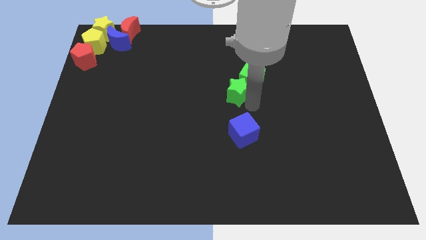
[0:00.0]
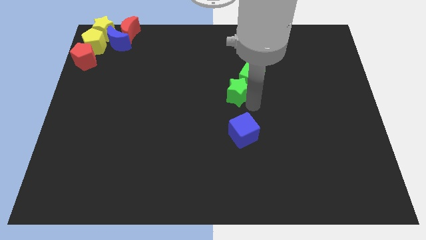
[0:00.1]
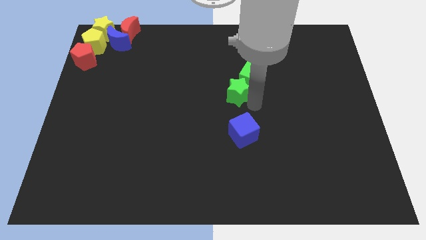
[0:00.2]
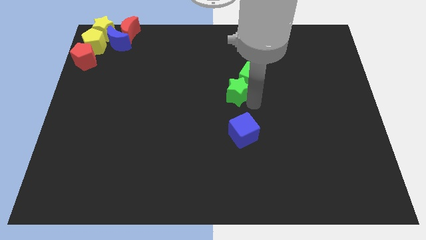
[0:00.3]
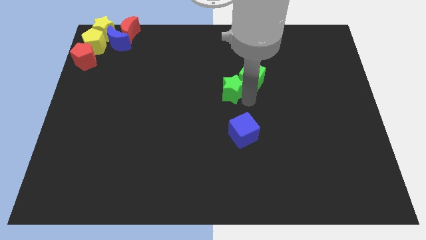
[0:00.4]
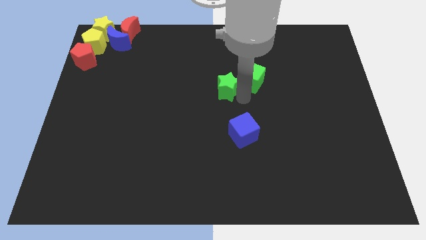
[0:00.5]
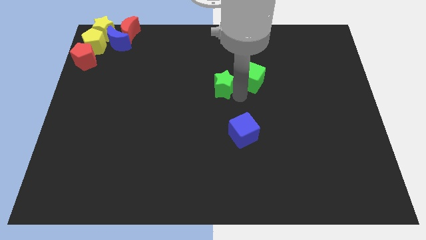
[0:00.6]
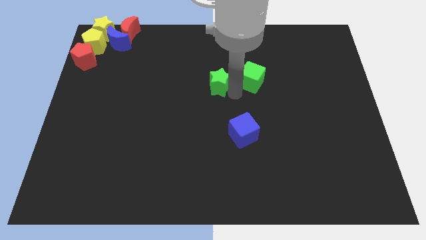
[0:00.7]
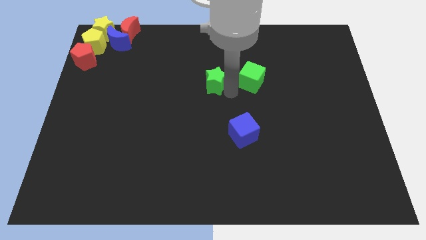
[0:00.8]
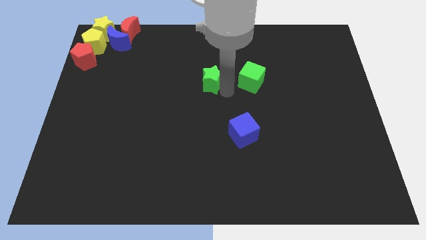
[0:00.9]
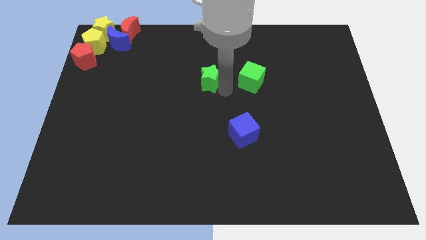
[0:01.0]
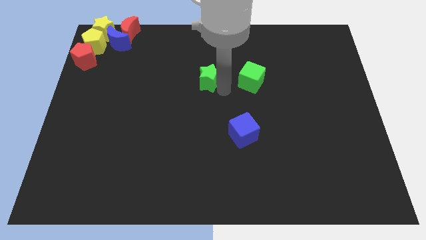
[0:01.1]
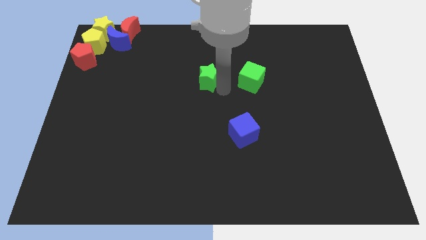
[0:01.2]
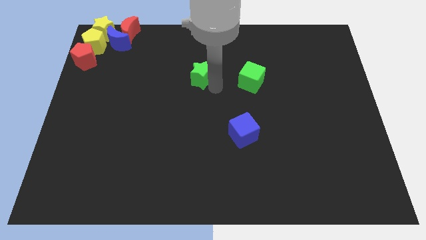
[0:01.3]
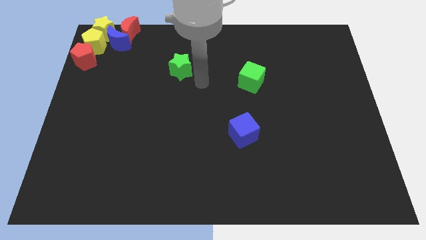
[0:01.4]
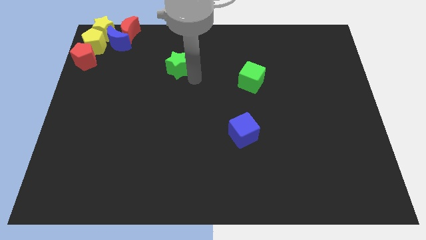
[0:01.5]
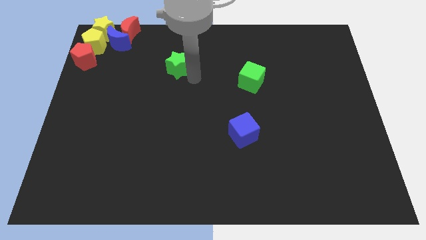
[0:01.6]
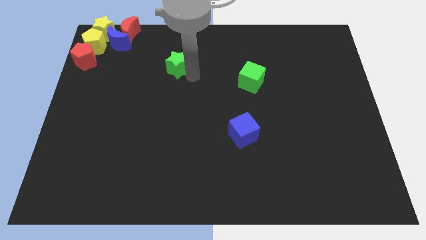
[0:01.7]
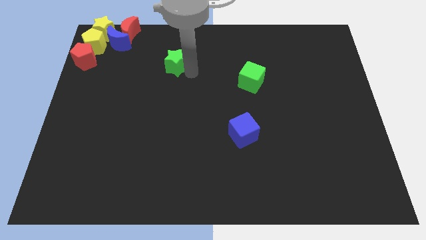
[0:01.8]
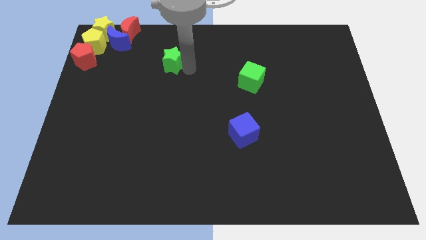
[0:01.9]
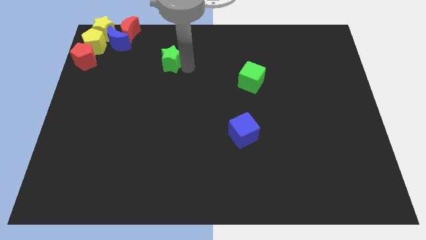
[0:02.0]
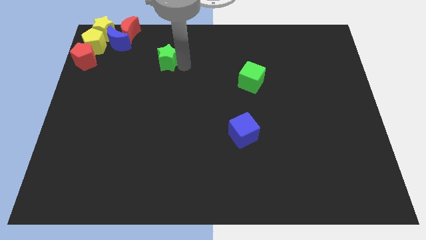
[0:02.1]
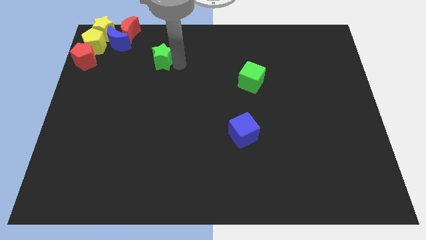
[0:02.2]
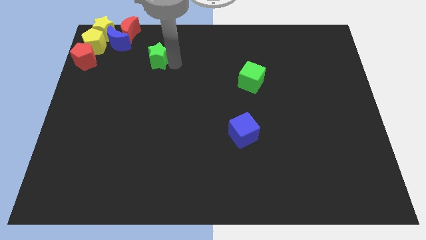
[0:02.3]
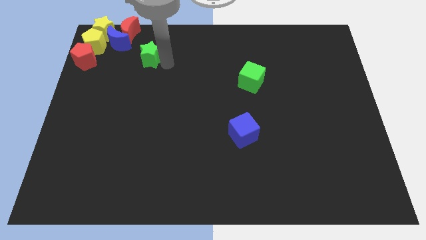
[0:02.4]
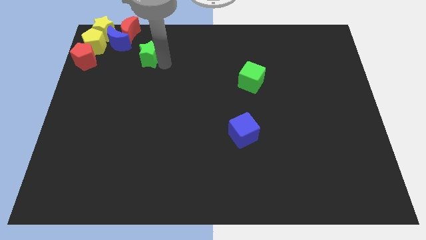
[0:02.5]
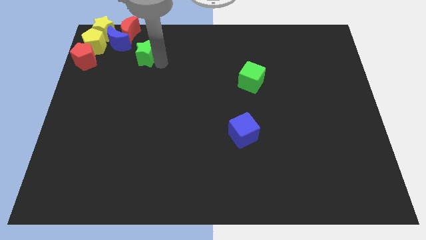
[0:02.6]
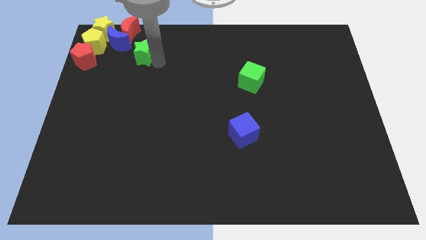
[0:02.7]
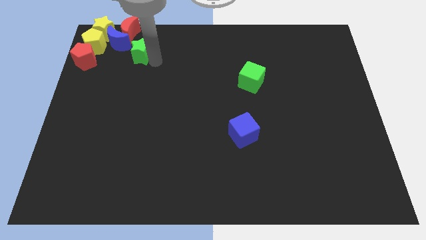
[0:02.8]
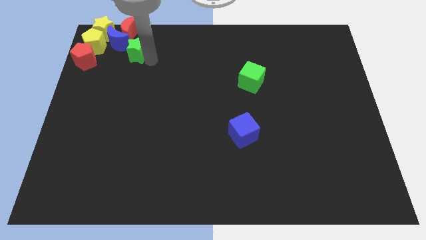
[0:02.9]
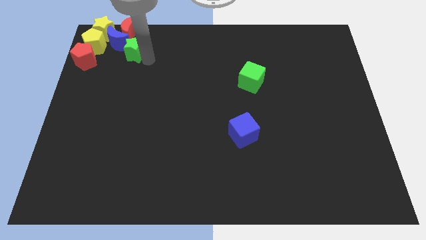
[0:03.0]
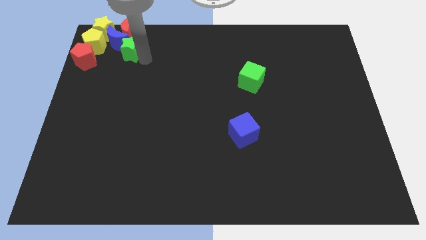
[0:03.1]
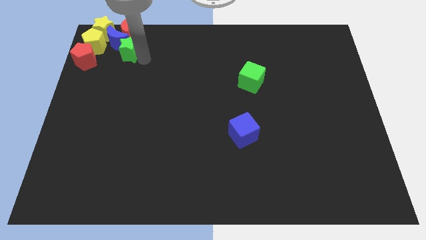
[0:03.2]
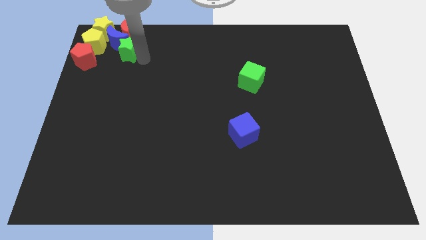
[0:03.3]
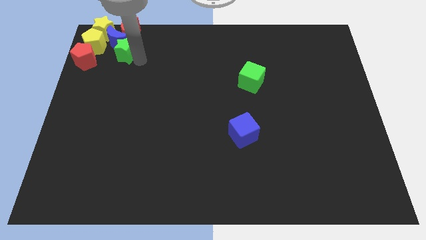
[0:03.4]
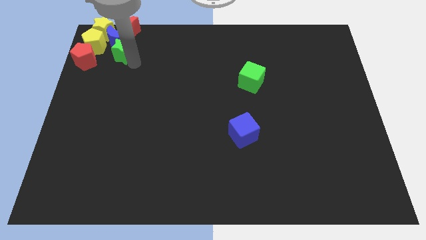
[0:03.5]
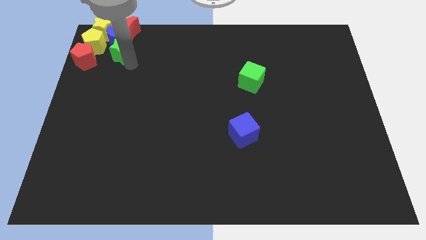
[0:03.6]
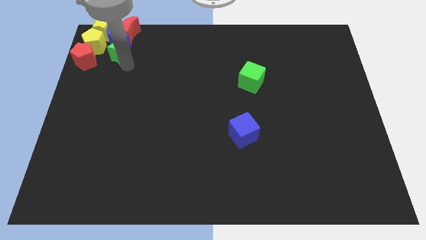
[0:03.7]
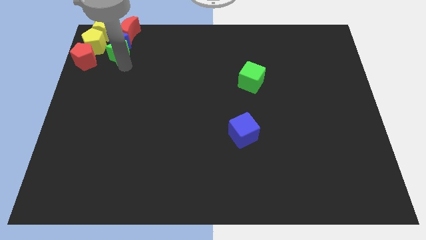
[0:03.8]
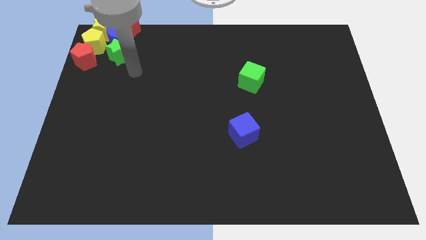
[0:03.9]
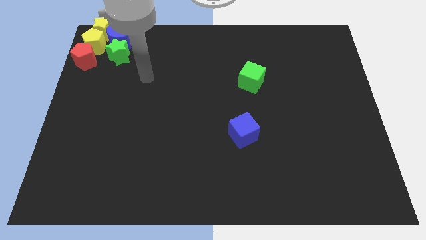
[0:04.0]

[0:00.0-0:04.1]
push the green star to the right side of the yellow pentagon

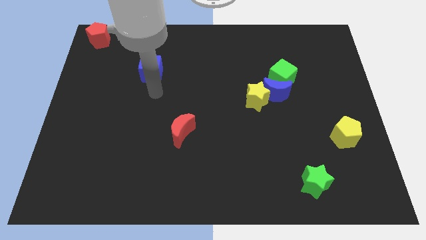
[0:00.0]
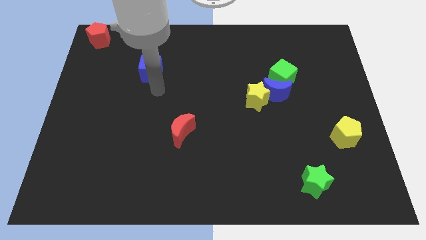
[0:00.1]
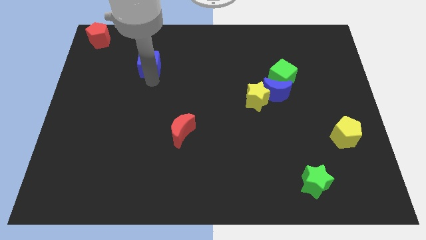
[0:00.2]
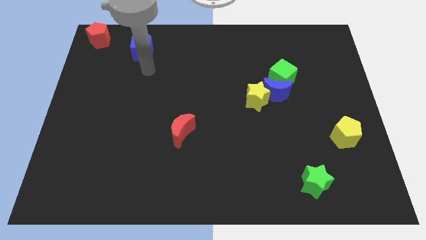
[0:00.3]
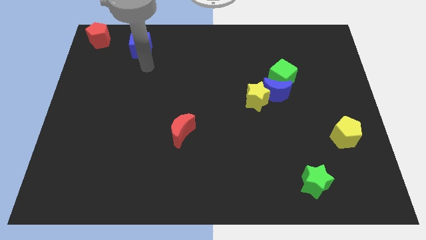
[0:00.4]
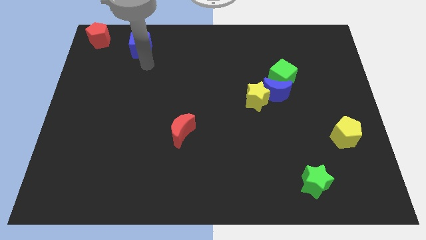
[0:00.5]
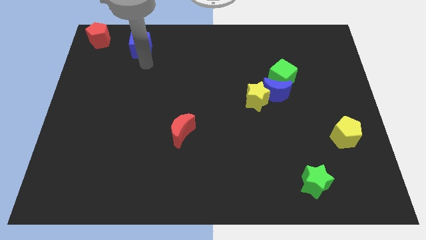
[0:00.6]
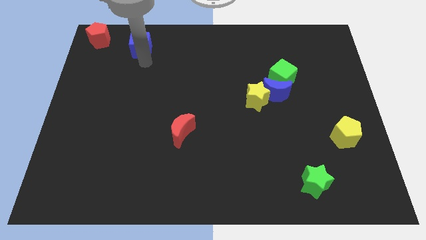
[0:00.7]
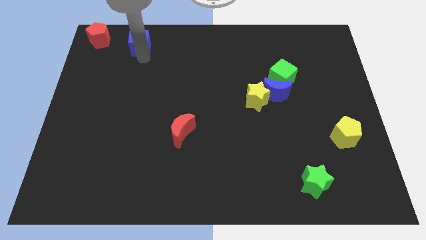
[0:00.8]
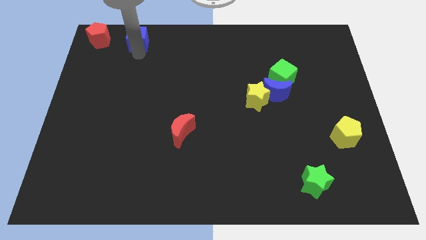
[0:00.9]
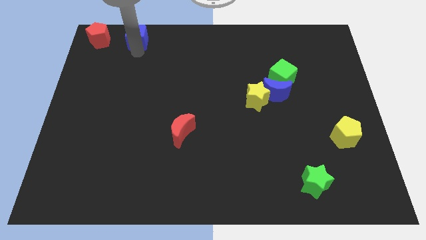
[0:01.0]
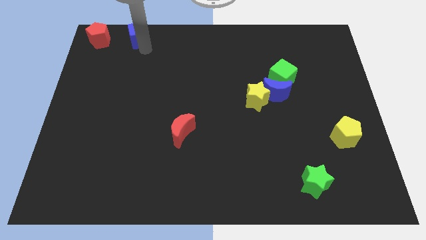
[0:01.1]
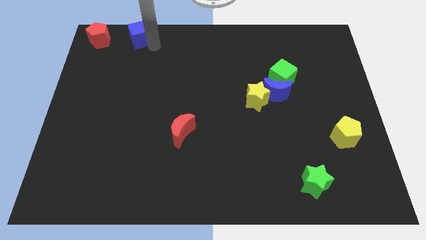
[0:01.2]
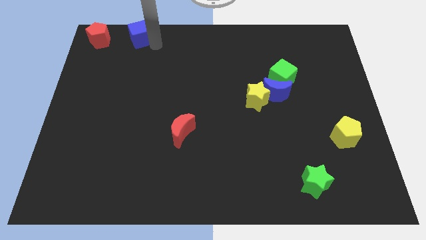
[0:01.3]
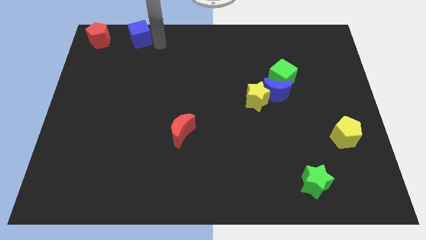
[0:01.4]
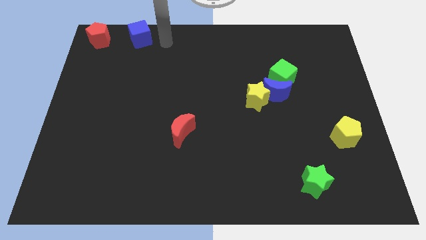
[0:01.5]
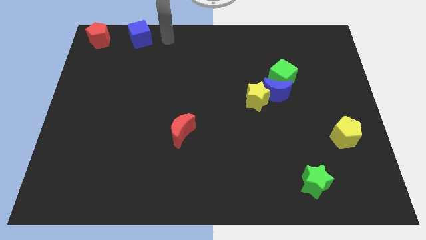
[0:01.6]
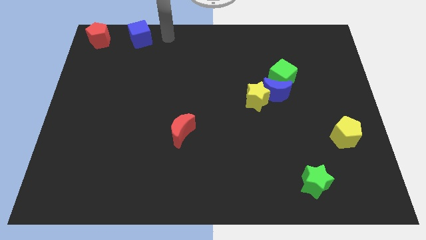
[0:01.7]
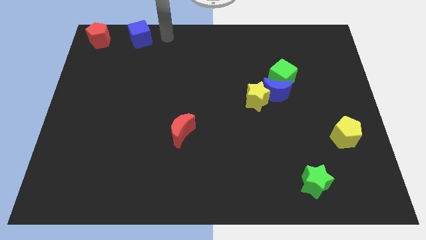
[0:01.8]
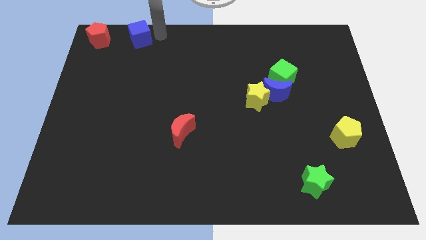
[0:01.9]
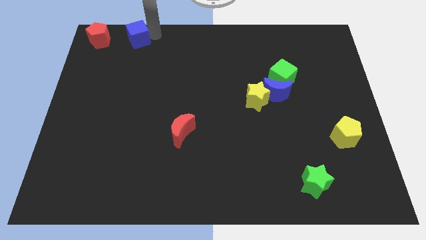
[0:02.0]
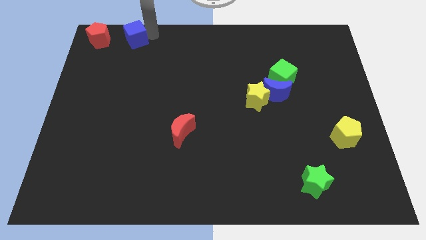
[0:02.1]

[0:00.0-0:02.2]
place the blue cube to right side of the red pentagon

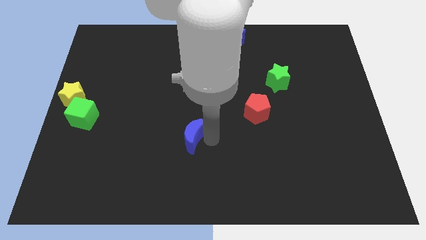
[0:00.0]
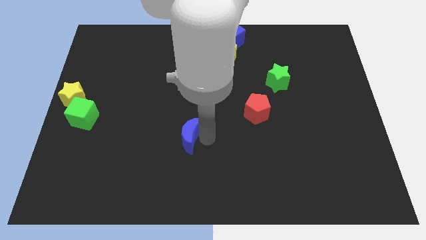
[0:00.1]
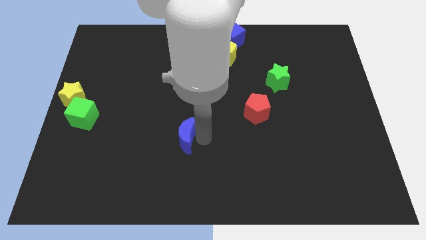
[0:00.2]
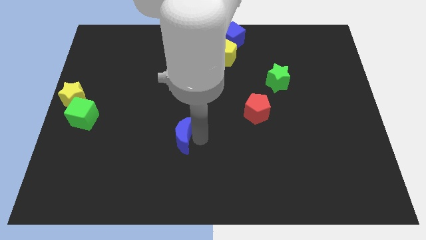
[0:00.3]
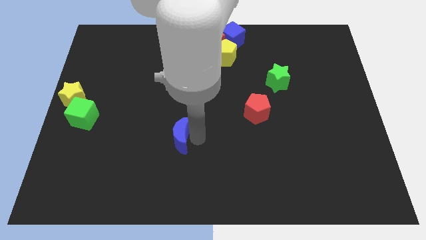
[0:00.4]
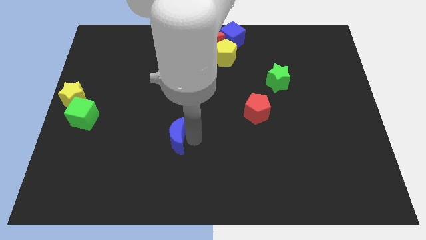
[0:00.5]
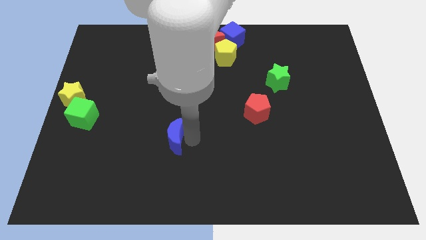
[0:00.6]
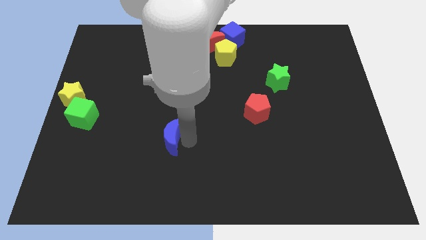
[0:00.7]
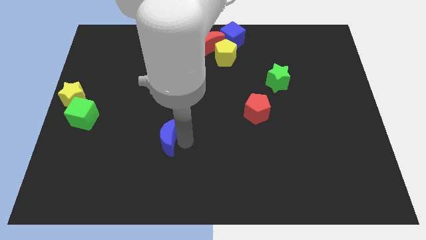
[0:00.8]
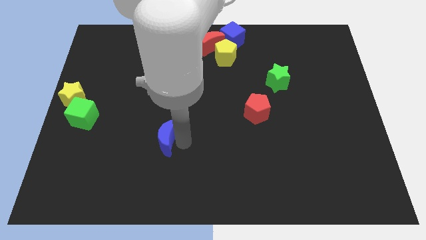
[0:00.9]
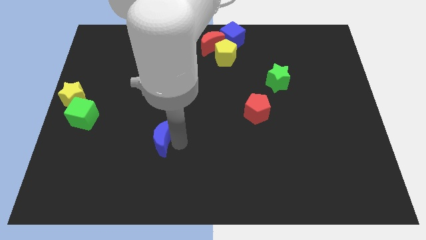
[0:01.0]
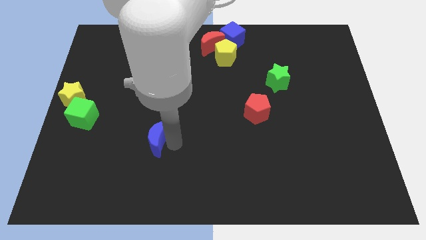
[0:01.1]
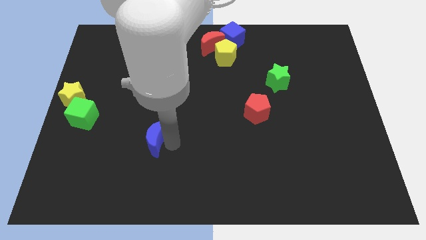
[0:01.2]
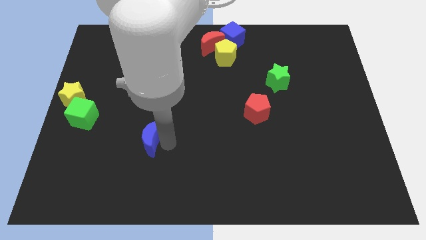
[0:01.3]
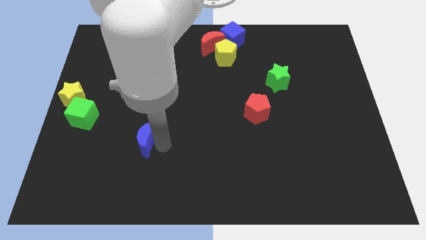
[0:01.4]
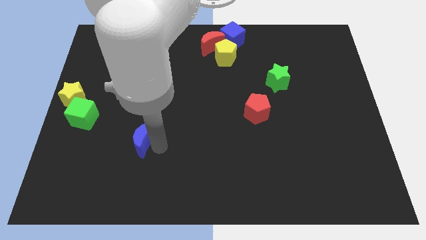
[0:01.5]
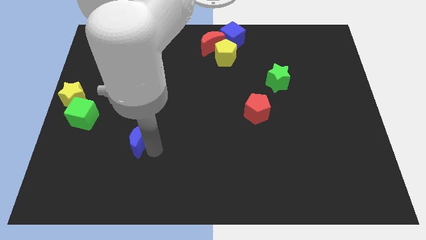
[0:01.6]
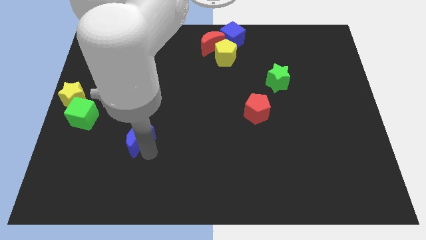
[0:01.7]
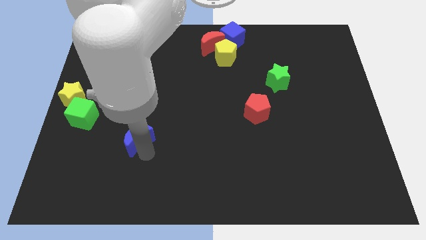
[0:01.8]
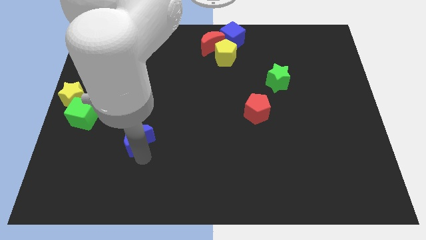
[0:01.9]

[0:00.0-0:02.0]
push the blue moon to the left side of the board

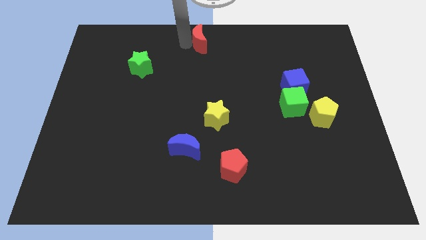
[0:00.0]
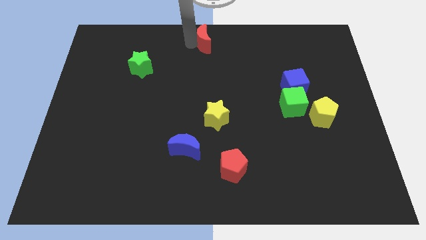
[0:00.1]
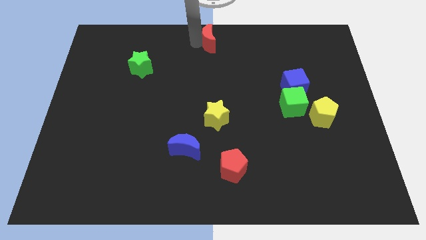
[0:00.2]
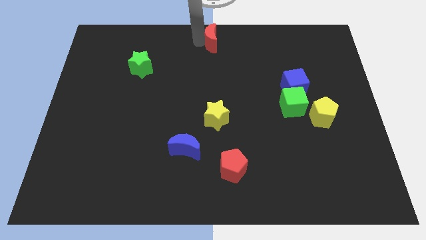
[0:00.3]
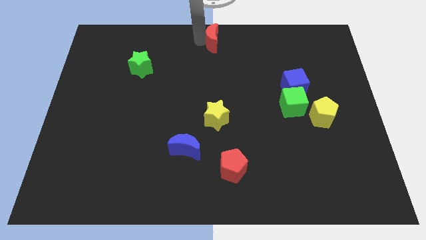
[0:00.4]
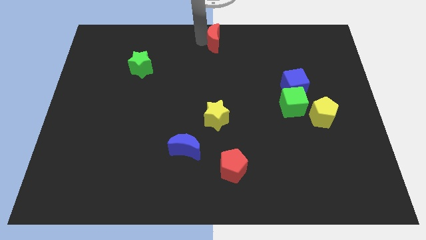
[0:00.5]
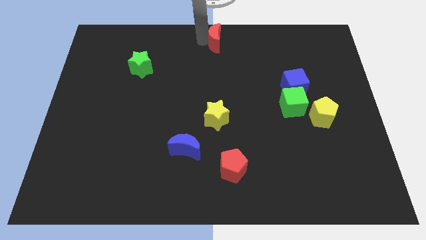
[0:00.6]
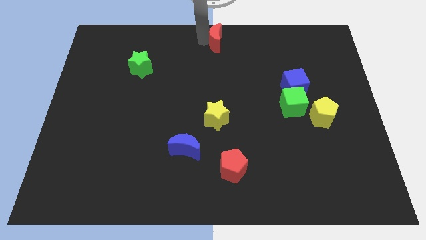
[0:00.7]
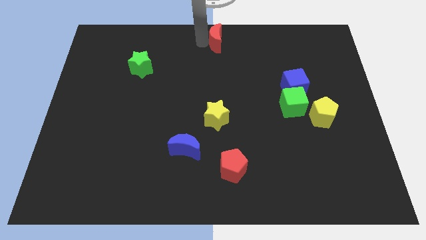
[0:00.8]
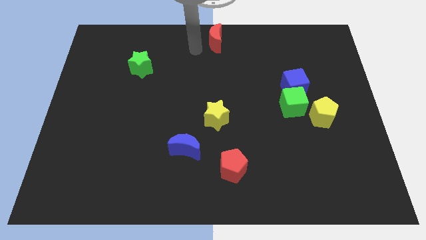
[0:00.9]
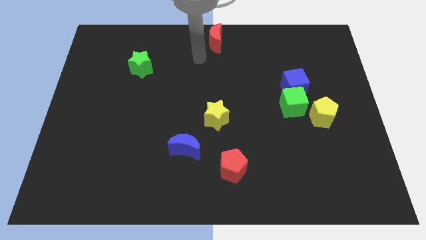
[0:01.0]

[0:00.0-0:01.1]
move red moon at center top
